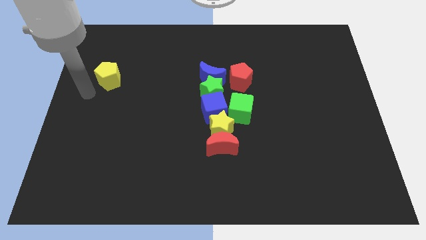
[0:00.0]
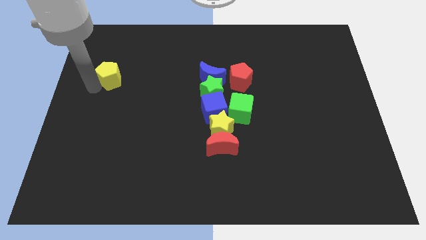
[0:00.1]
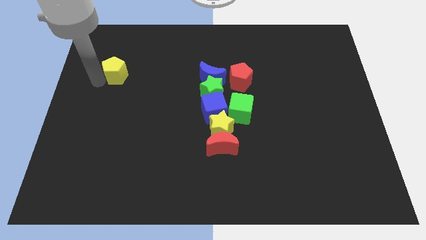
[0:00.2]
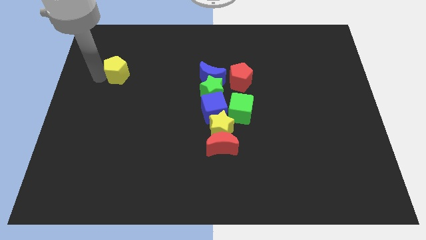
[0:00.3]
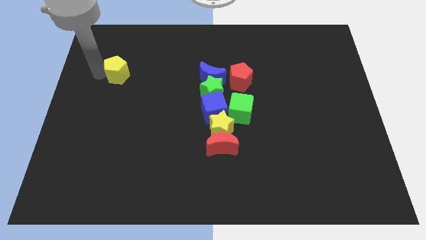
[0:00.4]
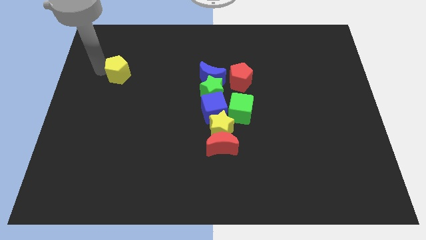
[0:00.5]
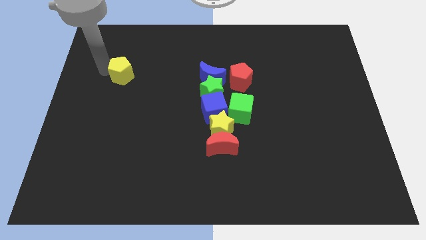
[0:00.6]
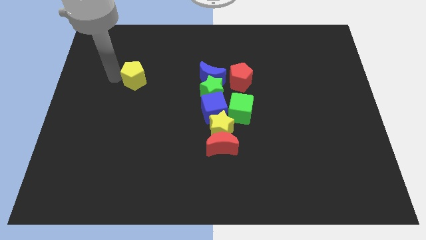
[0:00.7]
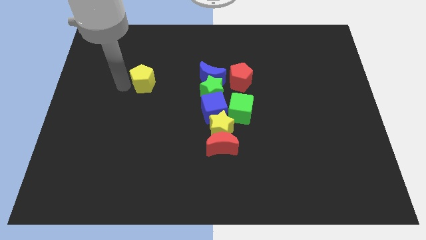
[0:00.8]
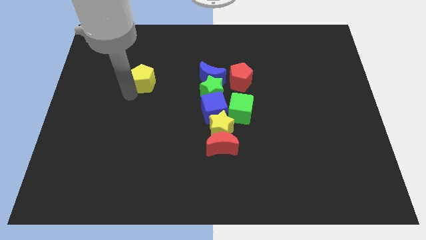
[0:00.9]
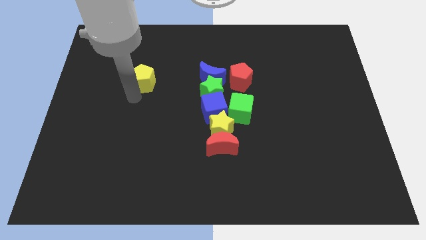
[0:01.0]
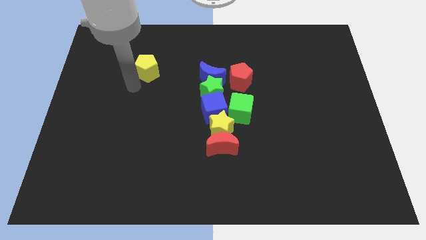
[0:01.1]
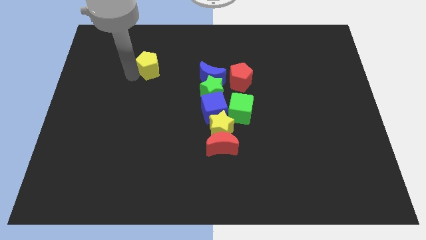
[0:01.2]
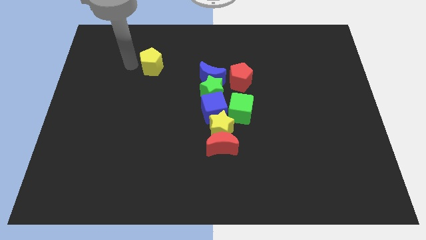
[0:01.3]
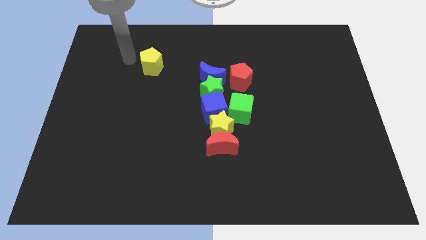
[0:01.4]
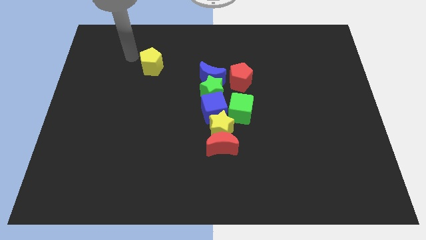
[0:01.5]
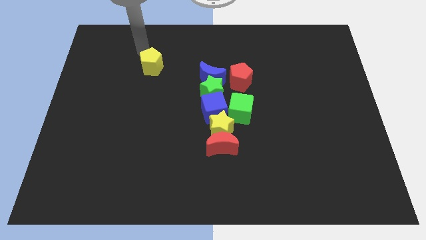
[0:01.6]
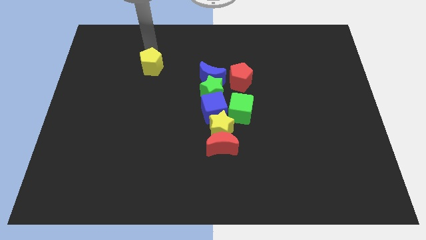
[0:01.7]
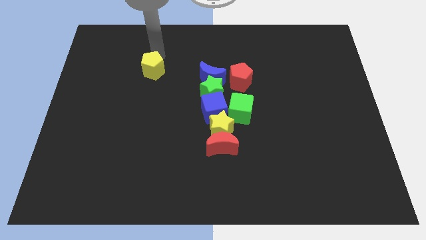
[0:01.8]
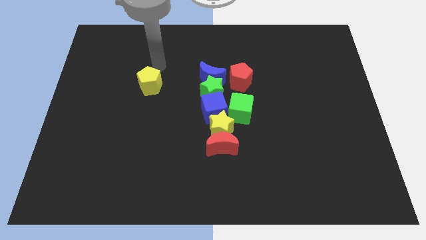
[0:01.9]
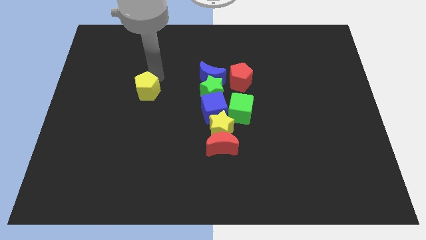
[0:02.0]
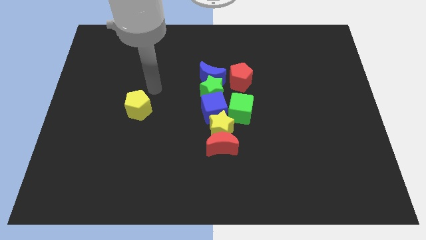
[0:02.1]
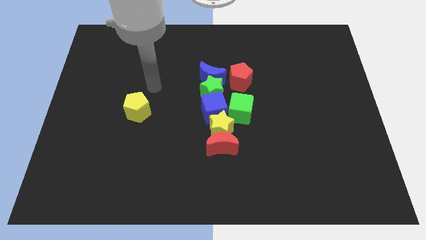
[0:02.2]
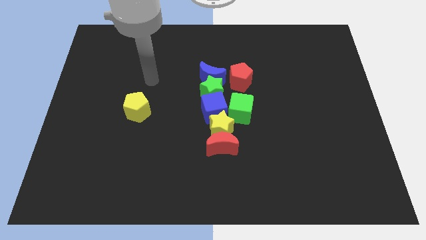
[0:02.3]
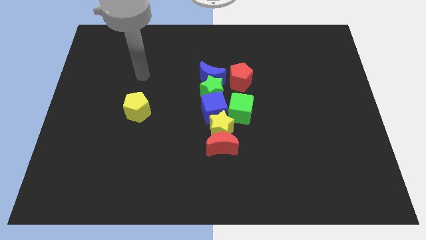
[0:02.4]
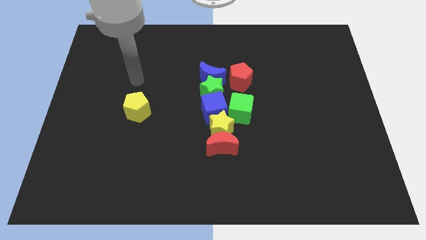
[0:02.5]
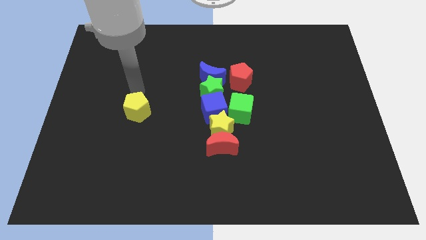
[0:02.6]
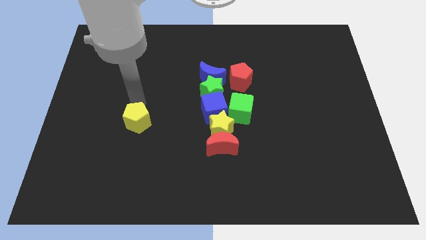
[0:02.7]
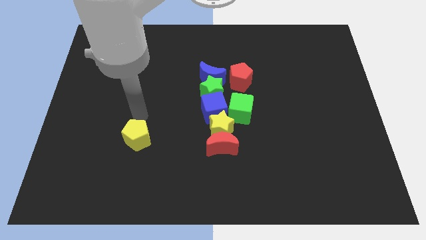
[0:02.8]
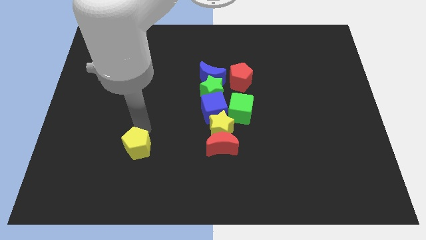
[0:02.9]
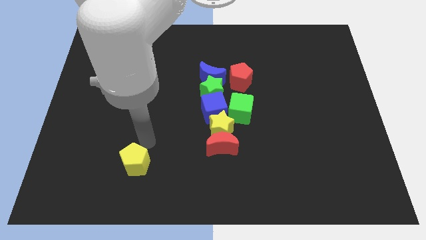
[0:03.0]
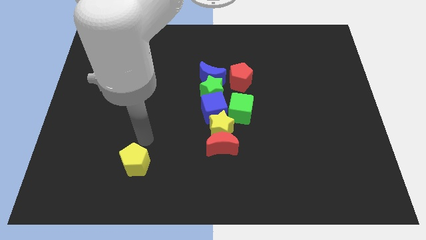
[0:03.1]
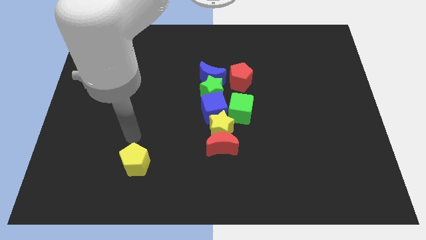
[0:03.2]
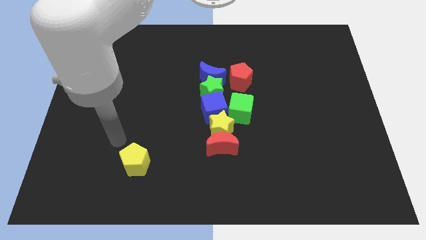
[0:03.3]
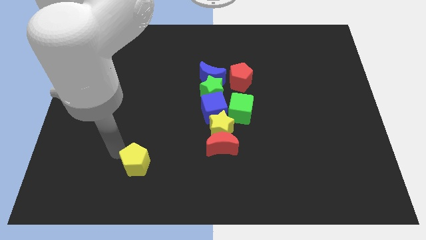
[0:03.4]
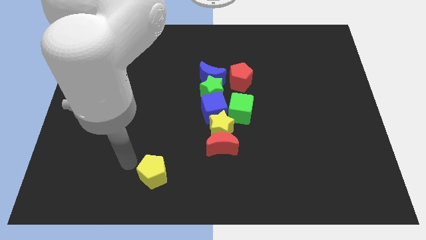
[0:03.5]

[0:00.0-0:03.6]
push the yellow pentagon towards the bottom of the board

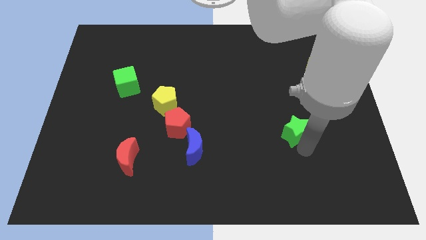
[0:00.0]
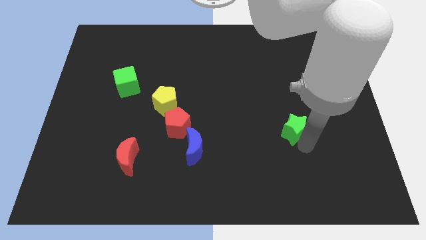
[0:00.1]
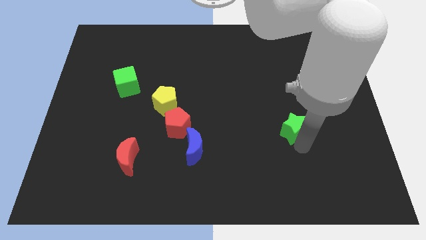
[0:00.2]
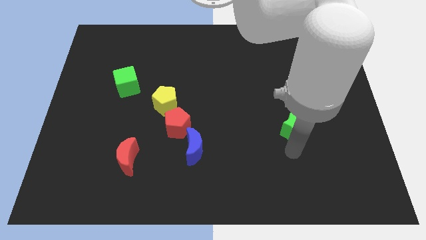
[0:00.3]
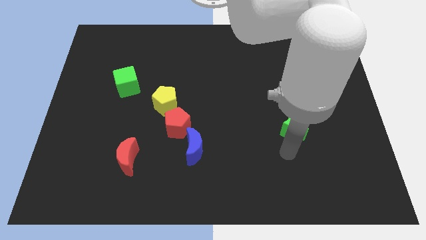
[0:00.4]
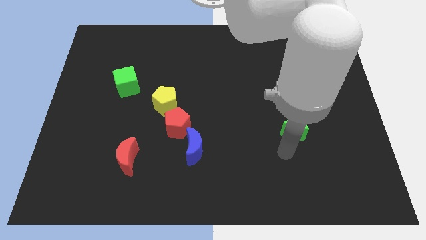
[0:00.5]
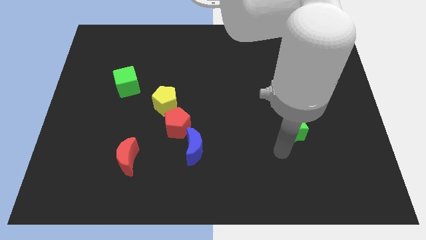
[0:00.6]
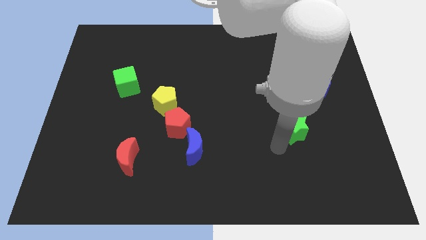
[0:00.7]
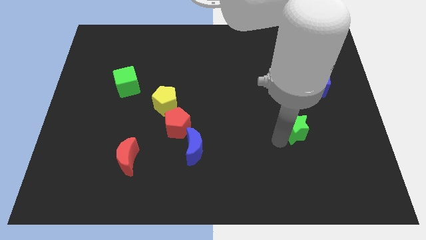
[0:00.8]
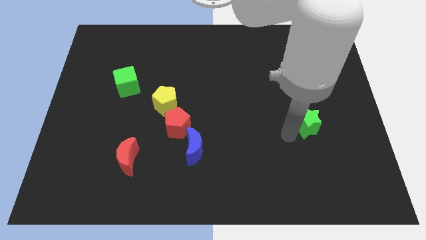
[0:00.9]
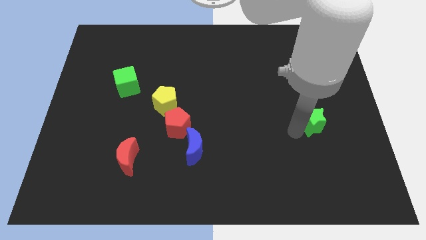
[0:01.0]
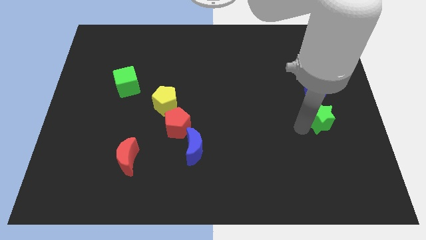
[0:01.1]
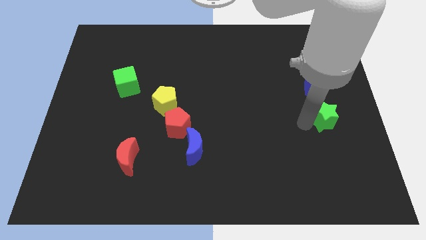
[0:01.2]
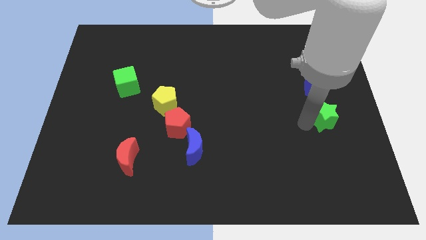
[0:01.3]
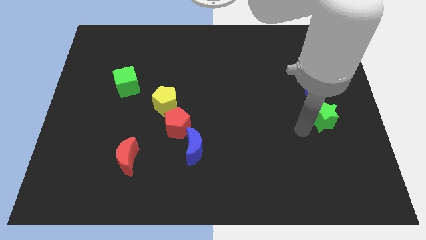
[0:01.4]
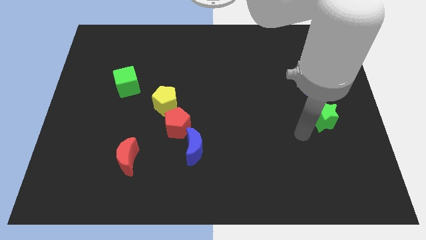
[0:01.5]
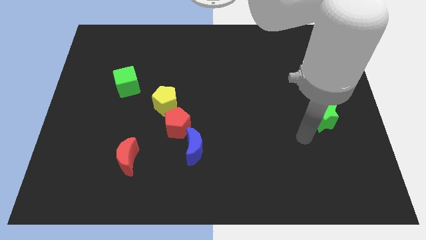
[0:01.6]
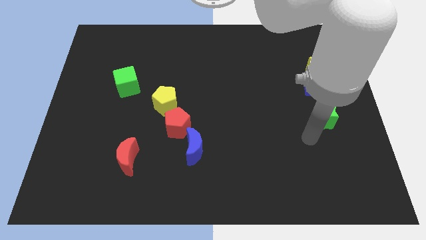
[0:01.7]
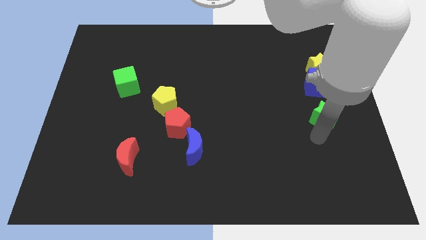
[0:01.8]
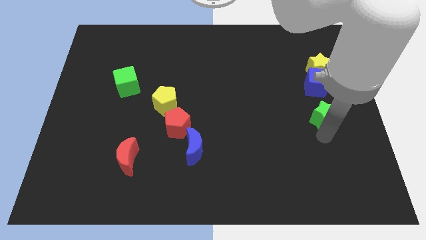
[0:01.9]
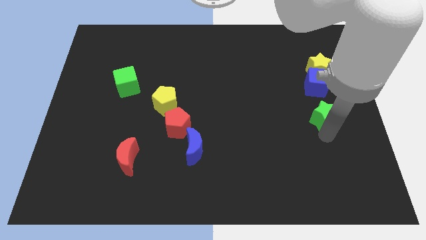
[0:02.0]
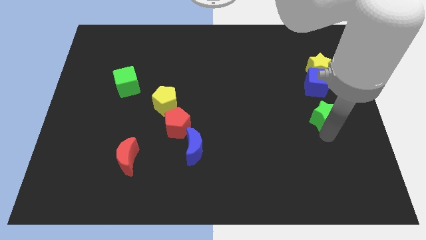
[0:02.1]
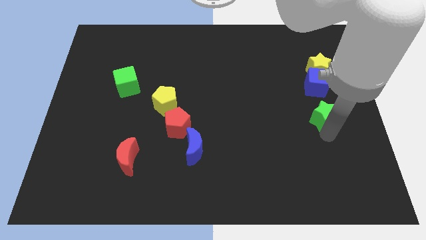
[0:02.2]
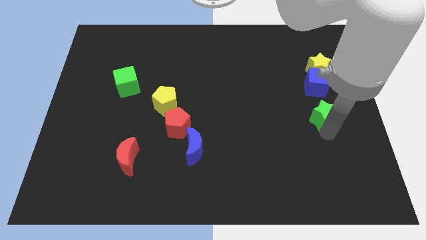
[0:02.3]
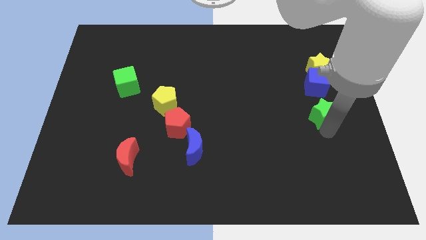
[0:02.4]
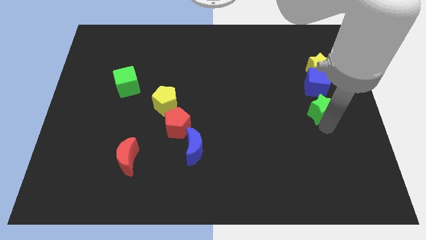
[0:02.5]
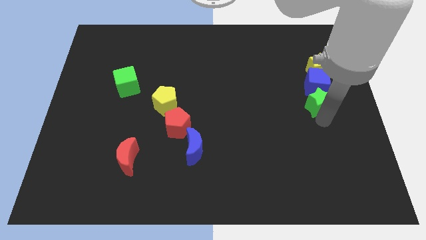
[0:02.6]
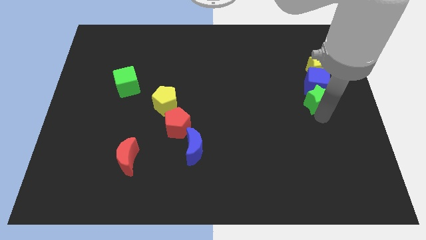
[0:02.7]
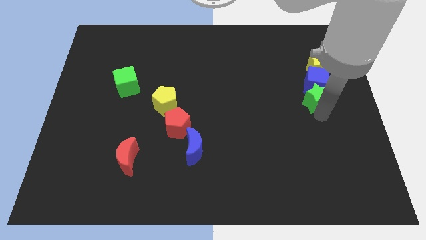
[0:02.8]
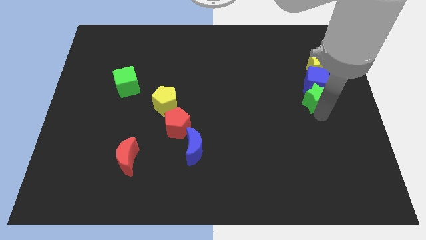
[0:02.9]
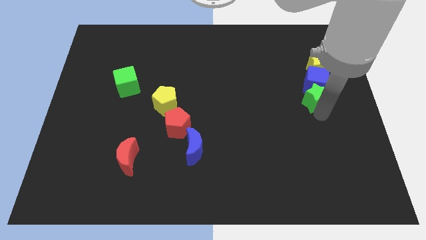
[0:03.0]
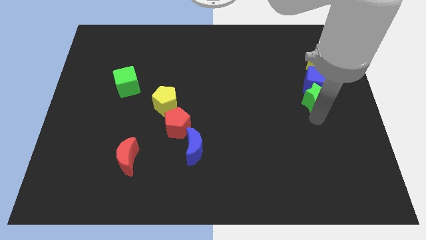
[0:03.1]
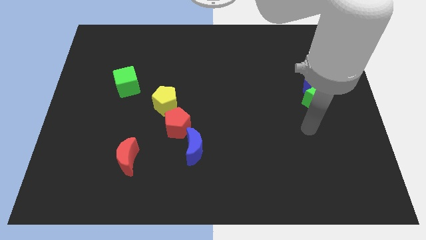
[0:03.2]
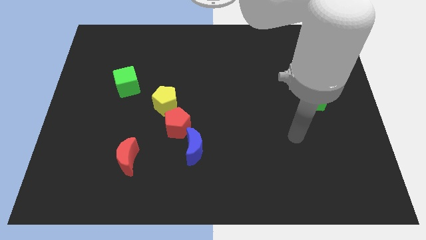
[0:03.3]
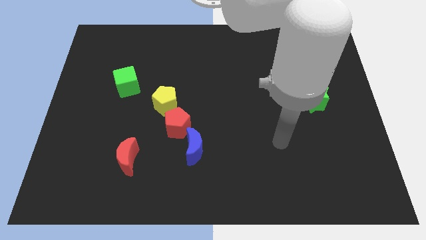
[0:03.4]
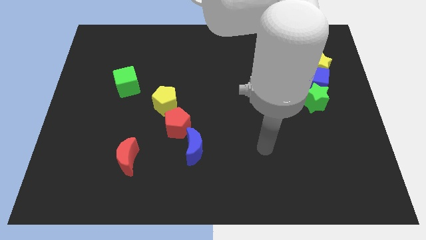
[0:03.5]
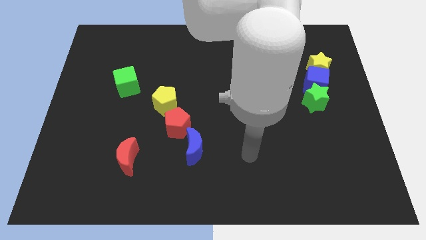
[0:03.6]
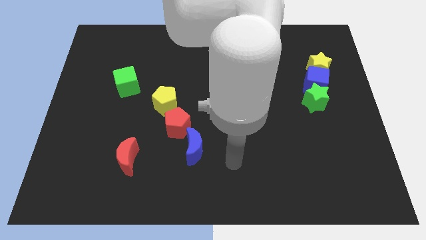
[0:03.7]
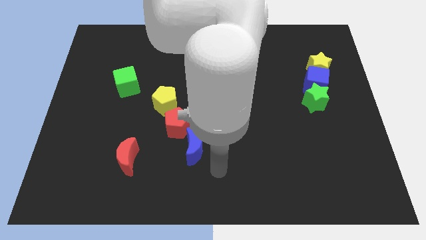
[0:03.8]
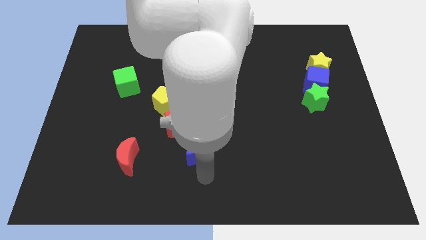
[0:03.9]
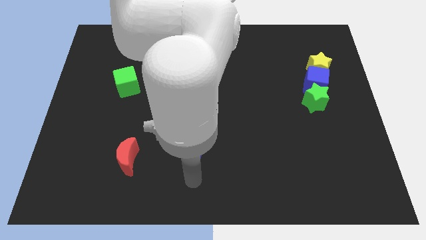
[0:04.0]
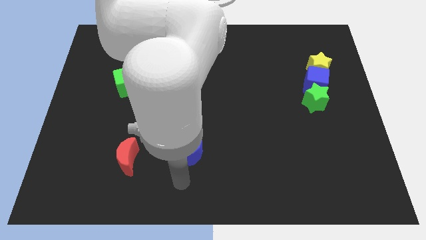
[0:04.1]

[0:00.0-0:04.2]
place the green star below the blue cube to form a vertical line

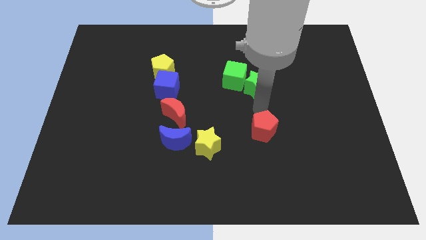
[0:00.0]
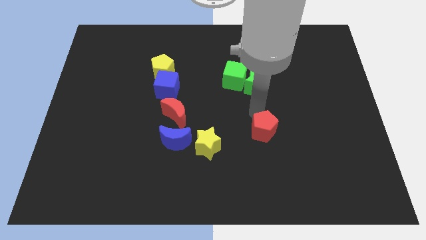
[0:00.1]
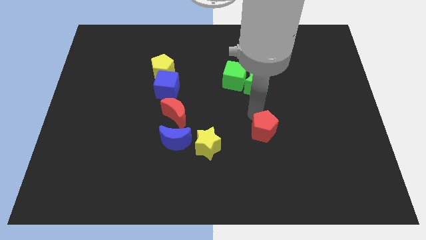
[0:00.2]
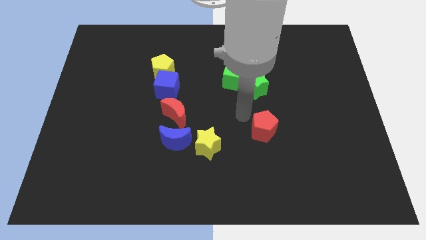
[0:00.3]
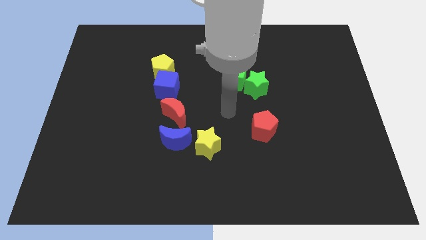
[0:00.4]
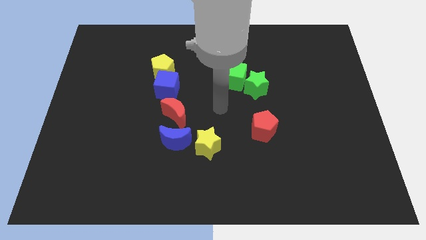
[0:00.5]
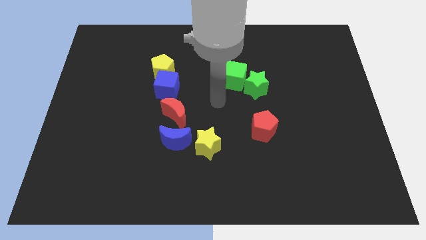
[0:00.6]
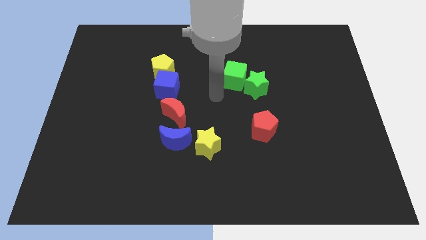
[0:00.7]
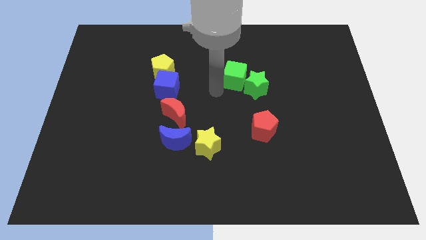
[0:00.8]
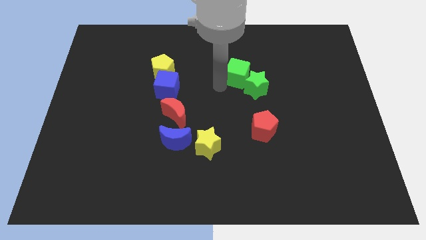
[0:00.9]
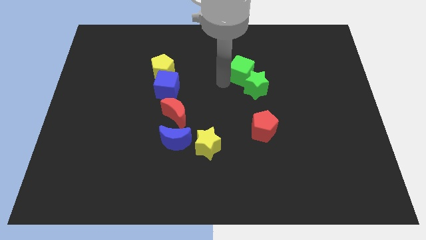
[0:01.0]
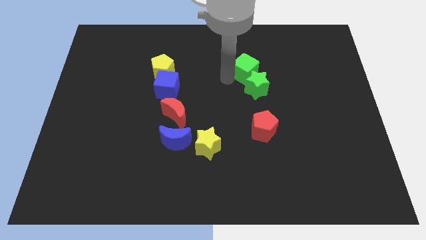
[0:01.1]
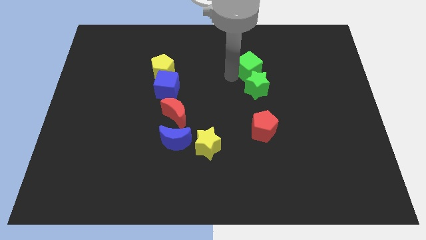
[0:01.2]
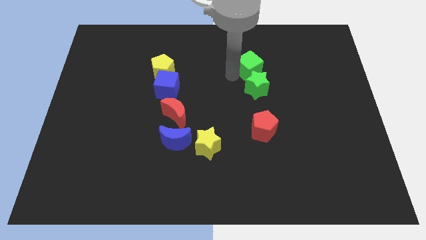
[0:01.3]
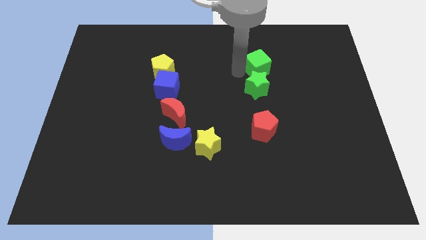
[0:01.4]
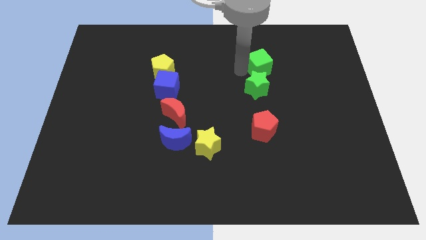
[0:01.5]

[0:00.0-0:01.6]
push the green cube to the top of the green star
